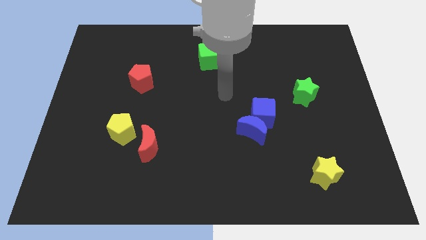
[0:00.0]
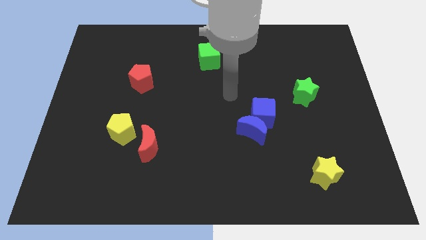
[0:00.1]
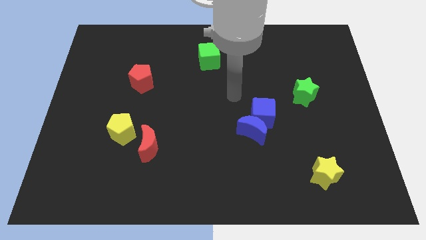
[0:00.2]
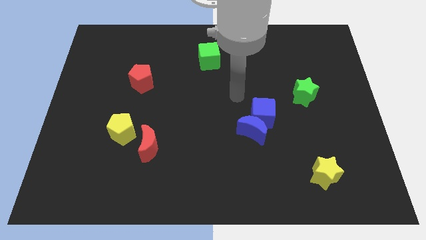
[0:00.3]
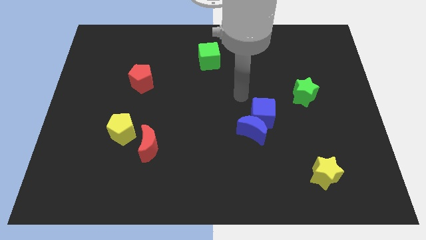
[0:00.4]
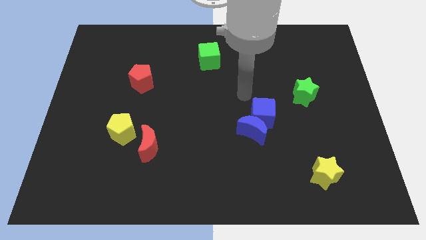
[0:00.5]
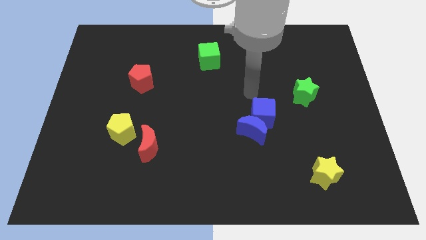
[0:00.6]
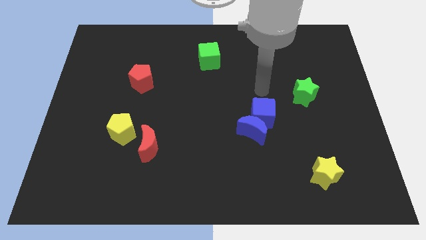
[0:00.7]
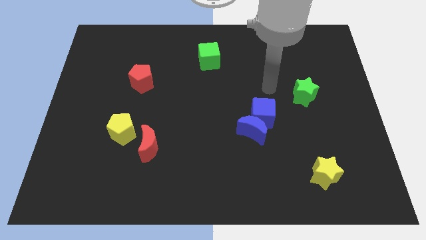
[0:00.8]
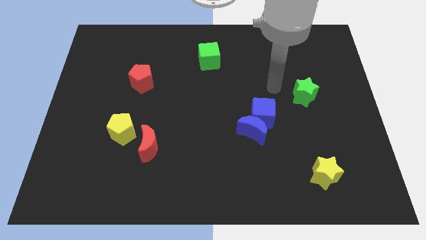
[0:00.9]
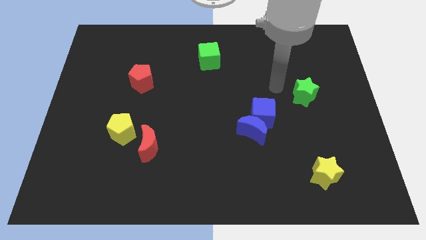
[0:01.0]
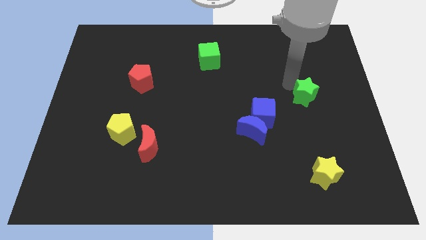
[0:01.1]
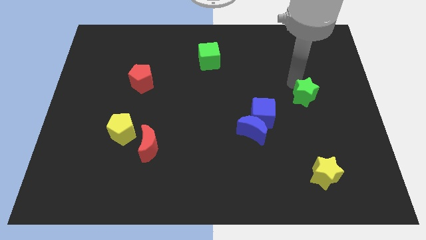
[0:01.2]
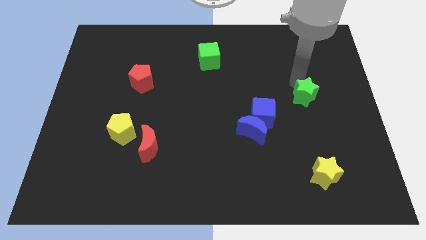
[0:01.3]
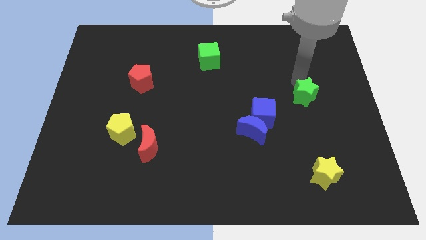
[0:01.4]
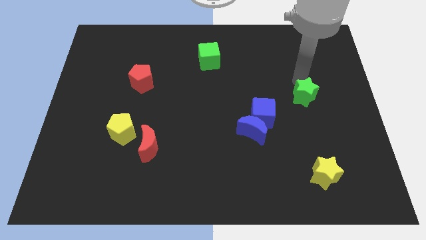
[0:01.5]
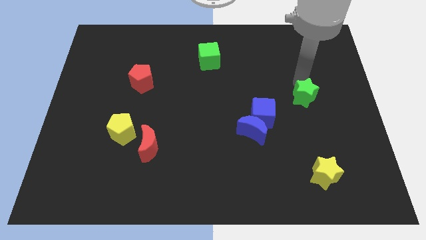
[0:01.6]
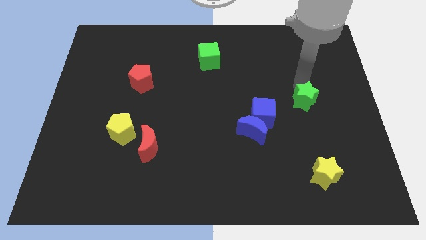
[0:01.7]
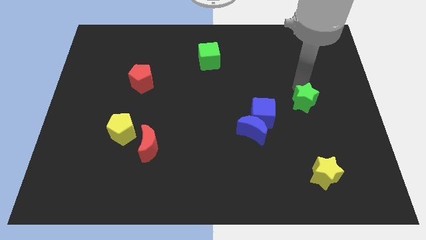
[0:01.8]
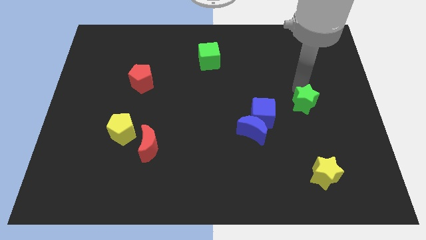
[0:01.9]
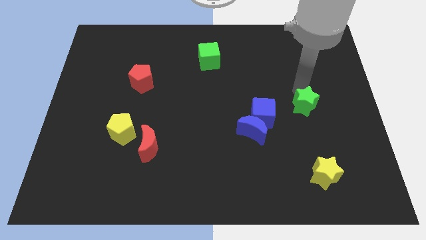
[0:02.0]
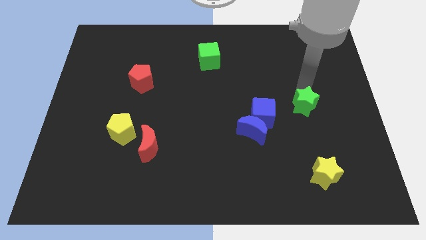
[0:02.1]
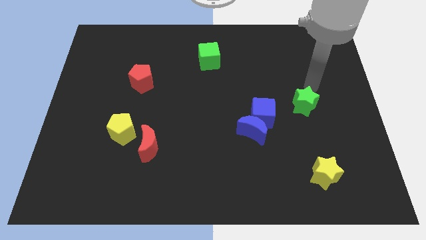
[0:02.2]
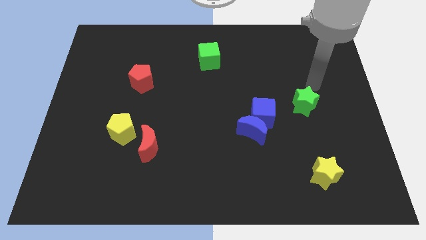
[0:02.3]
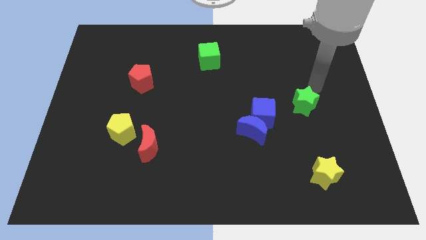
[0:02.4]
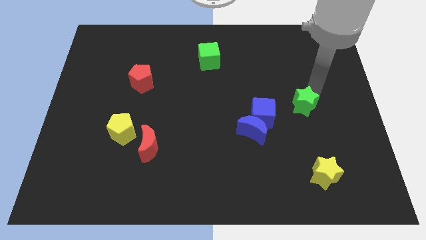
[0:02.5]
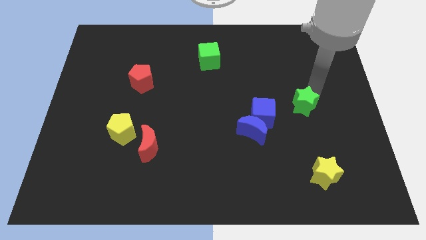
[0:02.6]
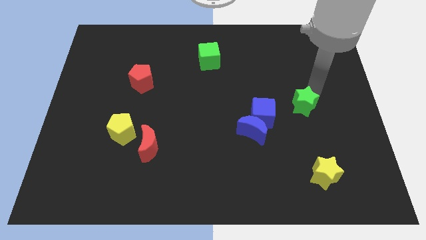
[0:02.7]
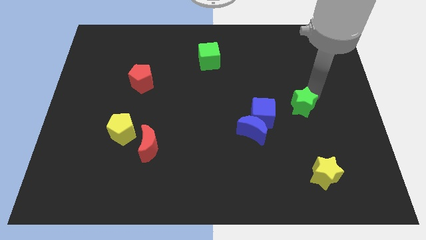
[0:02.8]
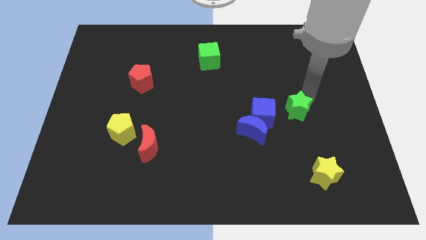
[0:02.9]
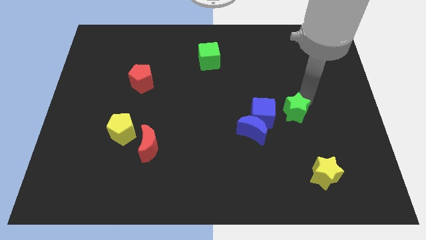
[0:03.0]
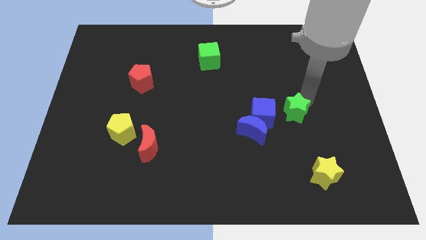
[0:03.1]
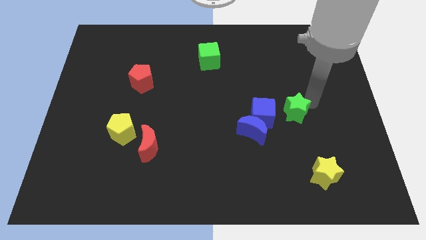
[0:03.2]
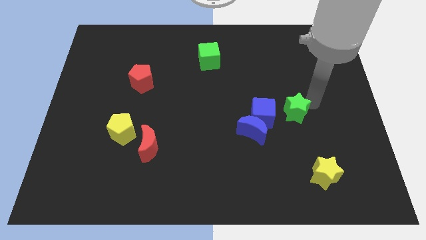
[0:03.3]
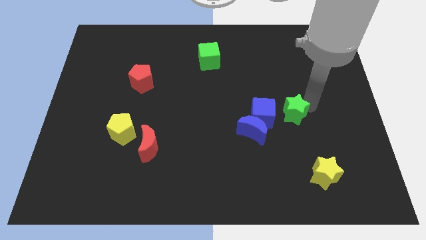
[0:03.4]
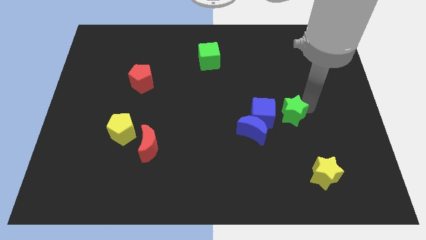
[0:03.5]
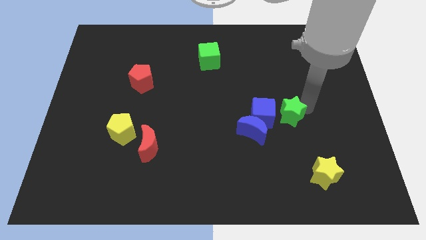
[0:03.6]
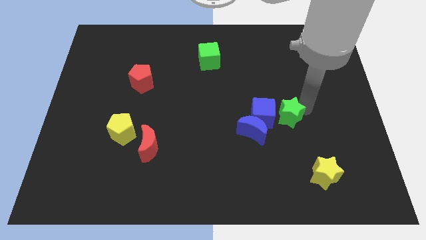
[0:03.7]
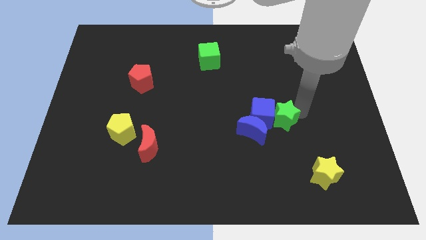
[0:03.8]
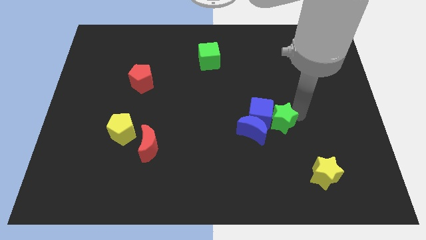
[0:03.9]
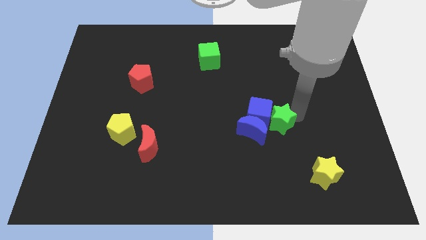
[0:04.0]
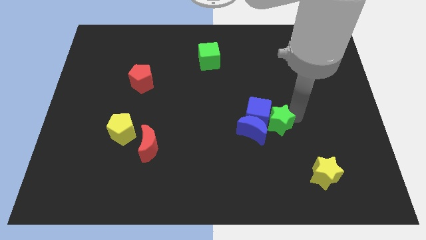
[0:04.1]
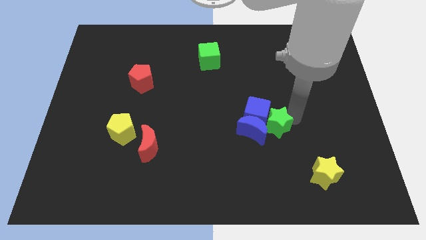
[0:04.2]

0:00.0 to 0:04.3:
move the green star right beside the blue cube and crescent

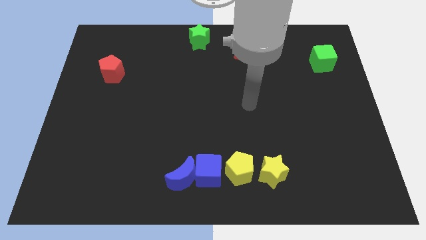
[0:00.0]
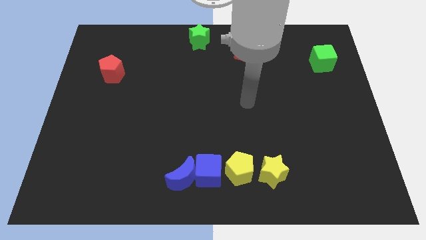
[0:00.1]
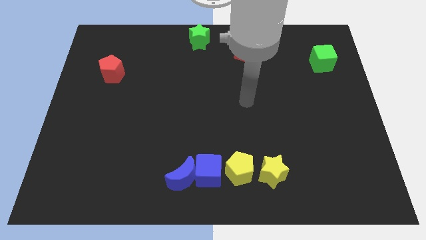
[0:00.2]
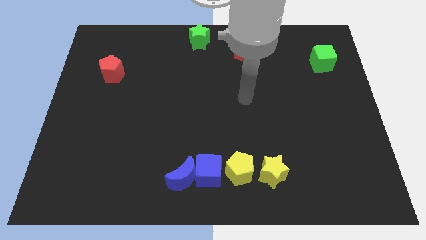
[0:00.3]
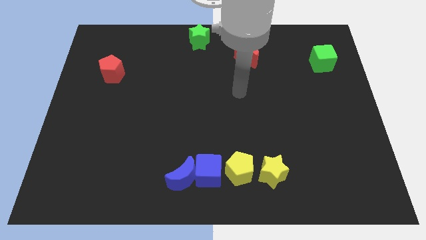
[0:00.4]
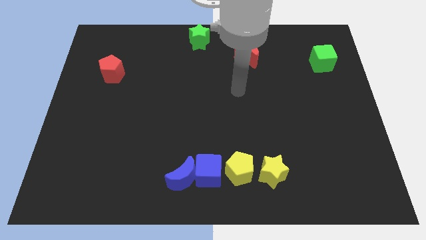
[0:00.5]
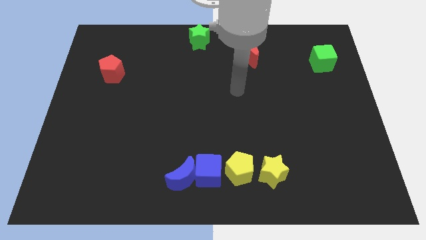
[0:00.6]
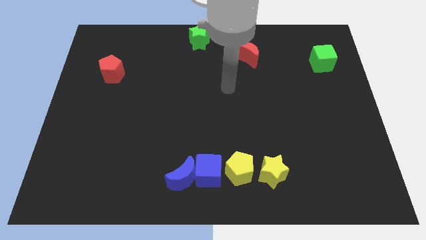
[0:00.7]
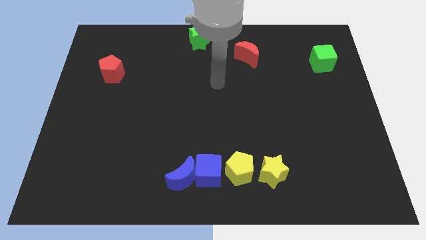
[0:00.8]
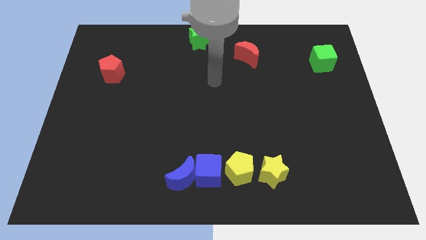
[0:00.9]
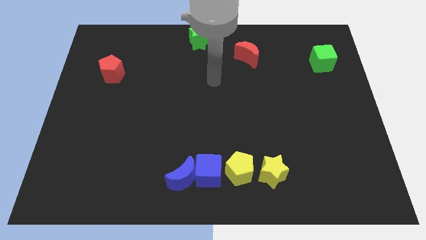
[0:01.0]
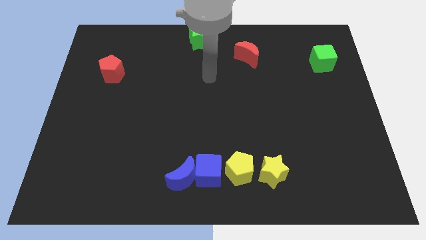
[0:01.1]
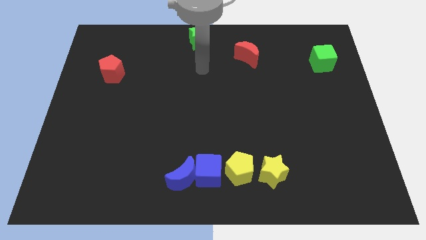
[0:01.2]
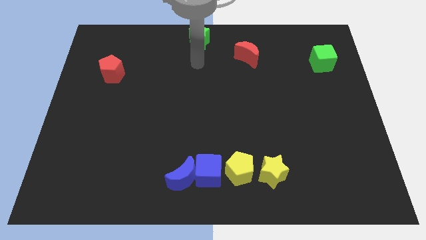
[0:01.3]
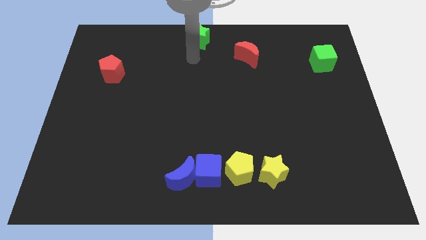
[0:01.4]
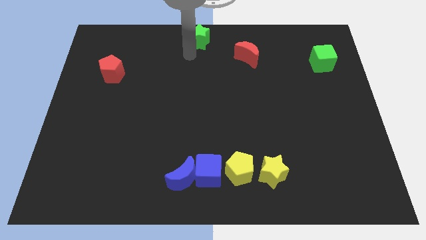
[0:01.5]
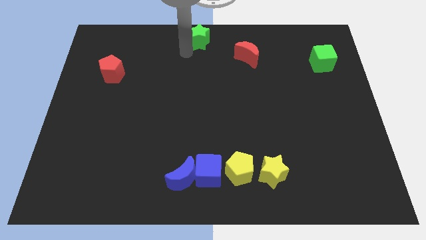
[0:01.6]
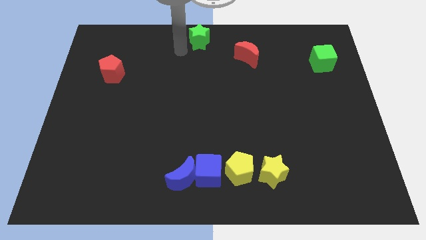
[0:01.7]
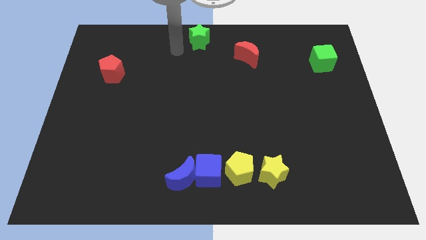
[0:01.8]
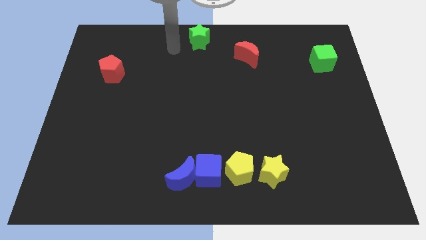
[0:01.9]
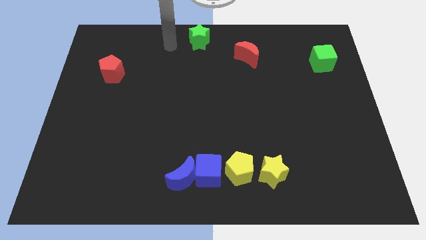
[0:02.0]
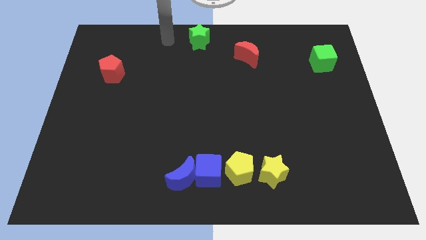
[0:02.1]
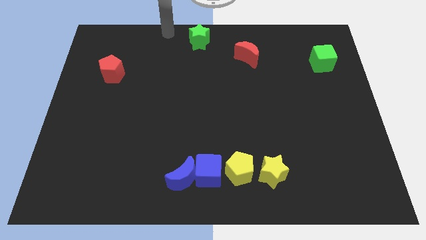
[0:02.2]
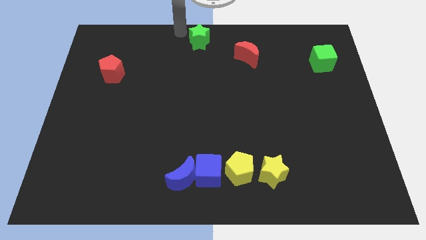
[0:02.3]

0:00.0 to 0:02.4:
point your arm at the top left side of green star

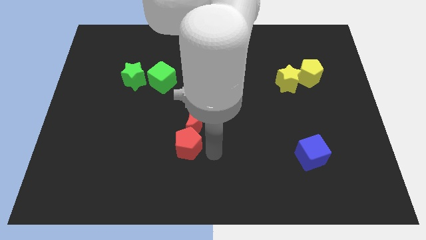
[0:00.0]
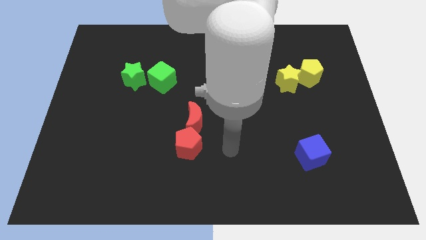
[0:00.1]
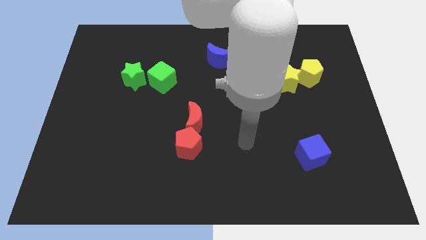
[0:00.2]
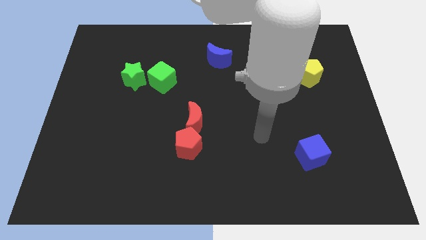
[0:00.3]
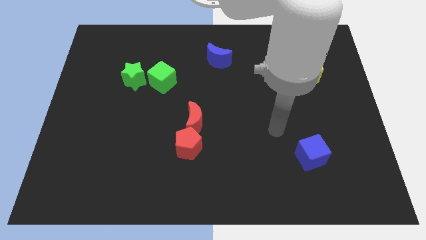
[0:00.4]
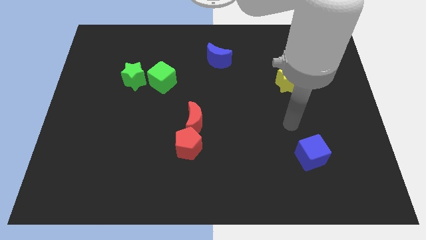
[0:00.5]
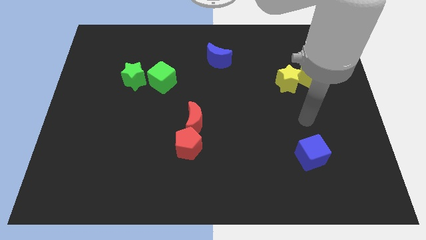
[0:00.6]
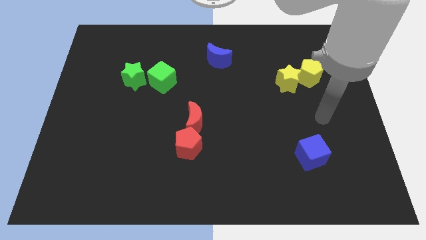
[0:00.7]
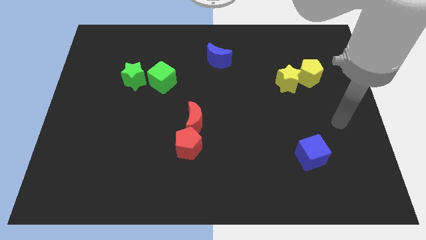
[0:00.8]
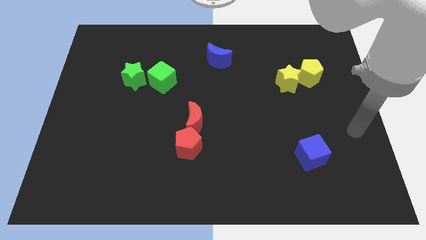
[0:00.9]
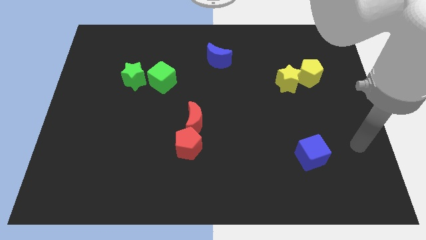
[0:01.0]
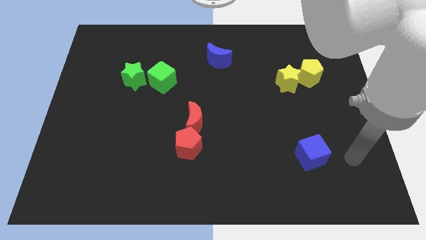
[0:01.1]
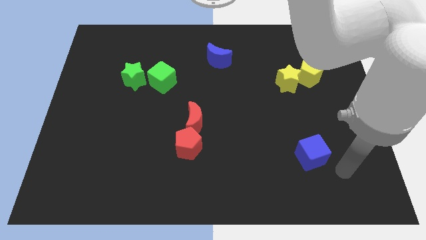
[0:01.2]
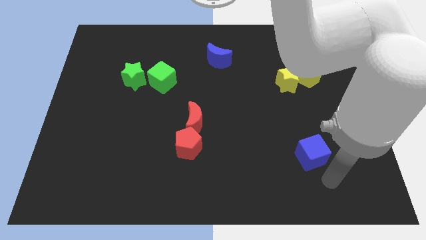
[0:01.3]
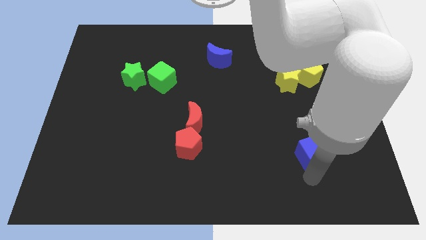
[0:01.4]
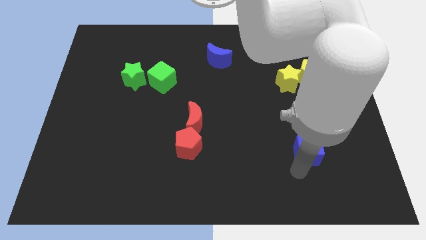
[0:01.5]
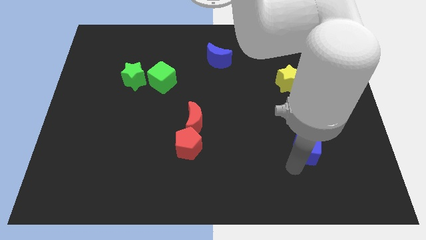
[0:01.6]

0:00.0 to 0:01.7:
push the blue cube slightly to the right

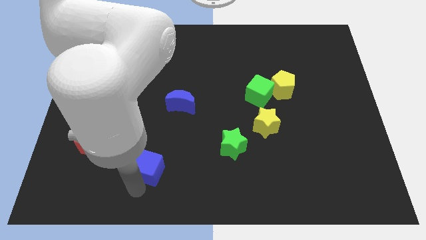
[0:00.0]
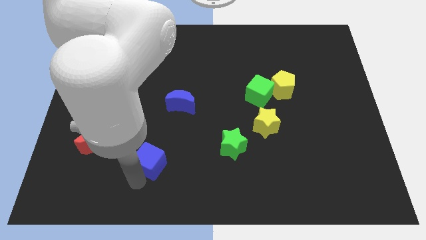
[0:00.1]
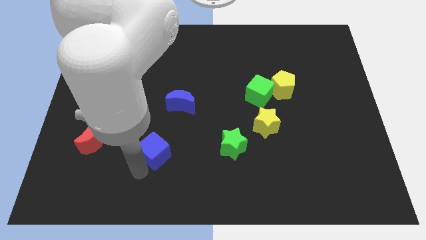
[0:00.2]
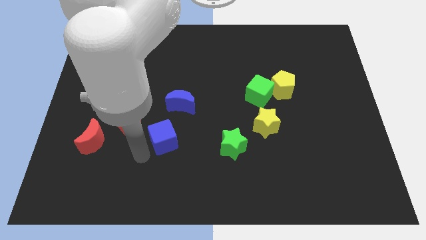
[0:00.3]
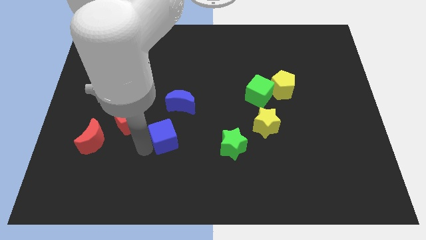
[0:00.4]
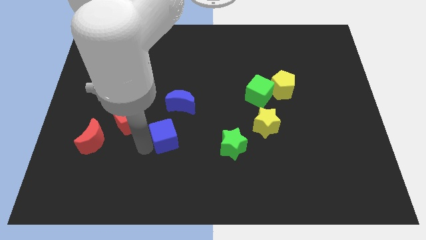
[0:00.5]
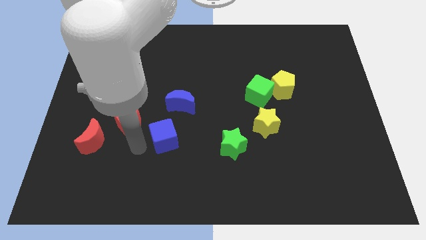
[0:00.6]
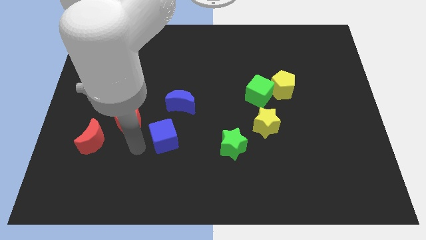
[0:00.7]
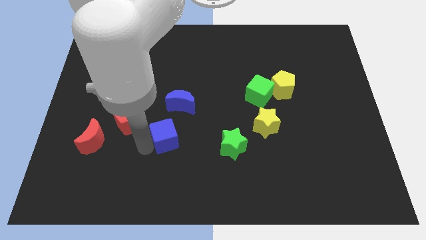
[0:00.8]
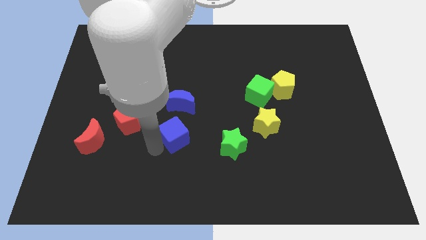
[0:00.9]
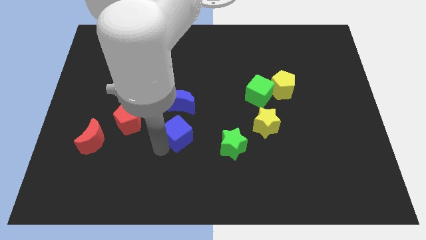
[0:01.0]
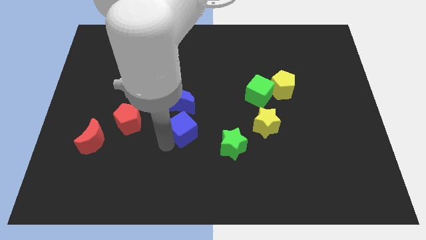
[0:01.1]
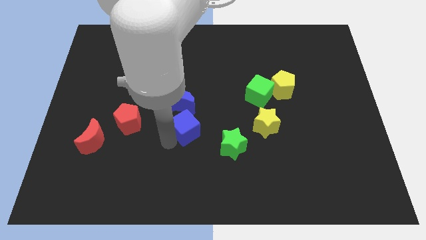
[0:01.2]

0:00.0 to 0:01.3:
place the blue cube in between the red pentagon and green star
